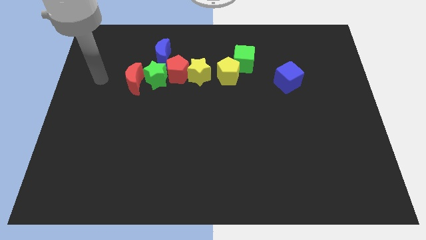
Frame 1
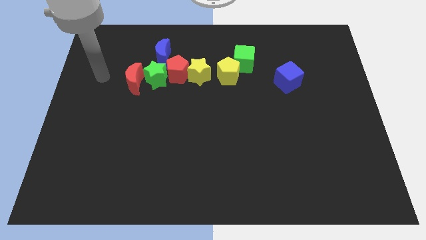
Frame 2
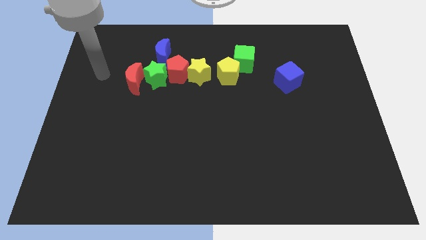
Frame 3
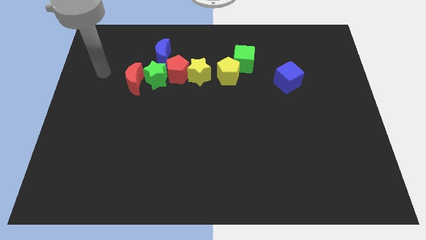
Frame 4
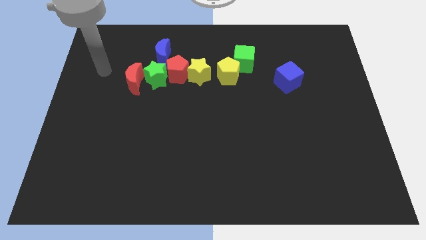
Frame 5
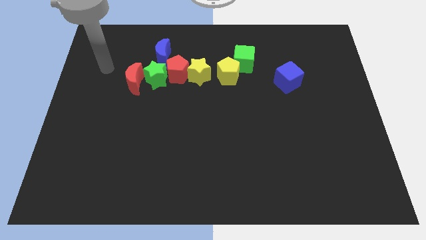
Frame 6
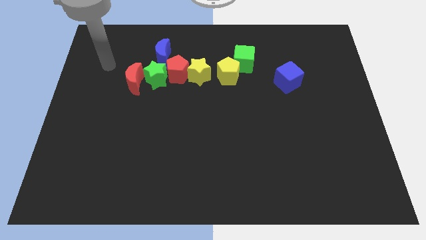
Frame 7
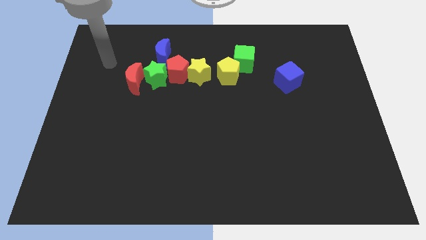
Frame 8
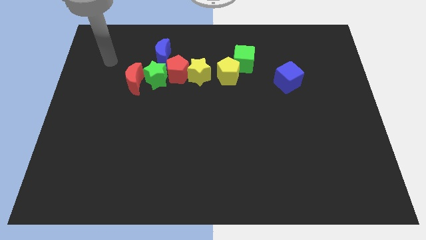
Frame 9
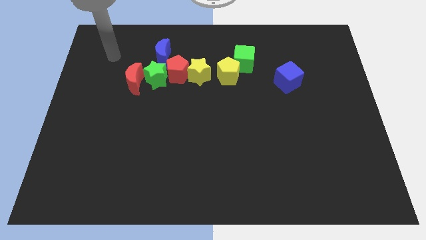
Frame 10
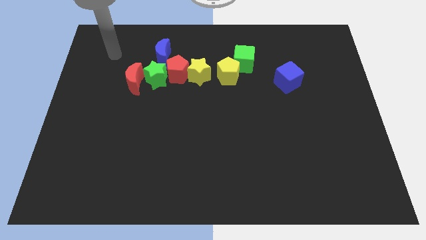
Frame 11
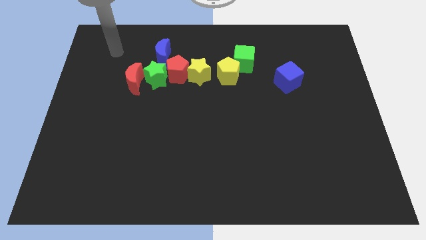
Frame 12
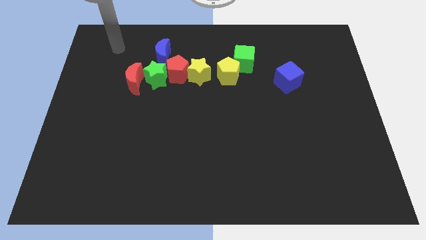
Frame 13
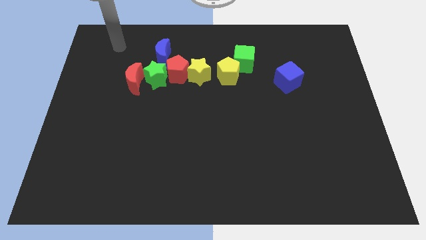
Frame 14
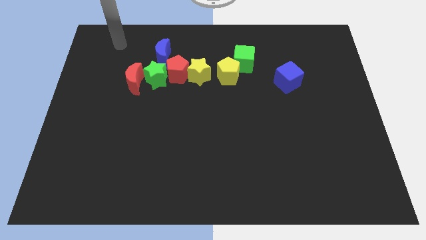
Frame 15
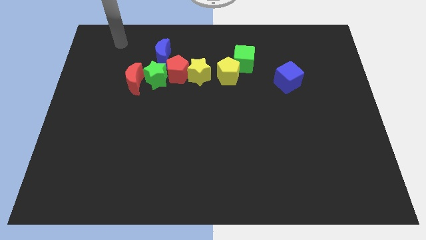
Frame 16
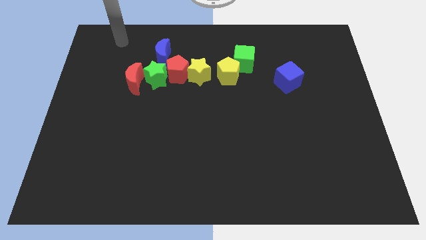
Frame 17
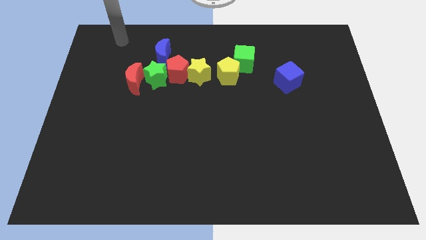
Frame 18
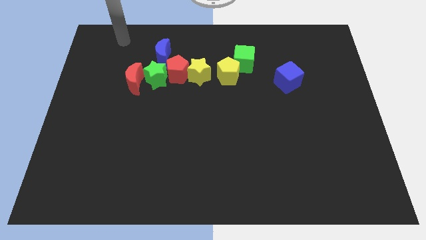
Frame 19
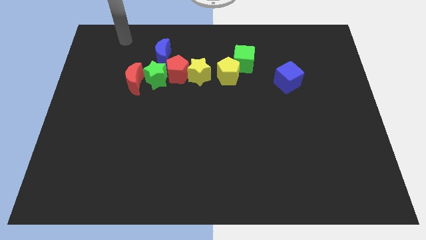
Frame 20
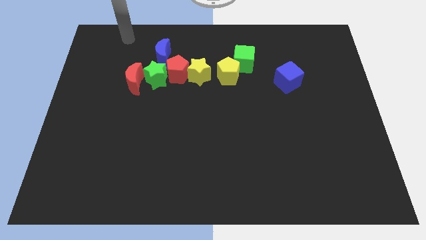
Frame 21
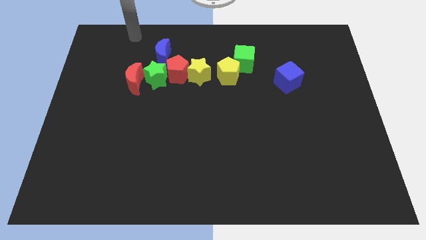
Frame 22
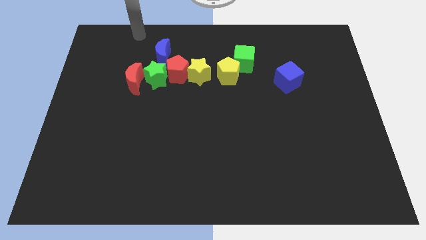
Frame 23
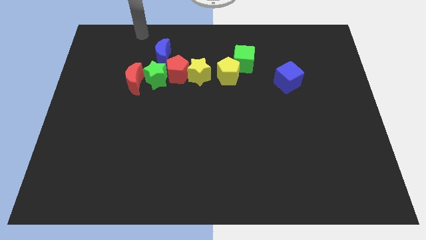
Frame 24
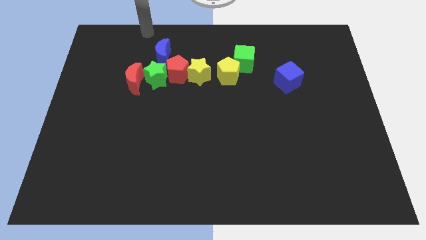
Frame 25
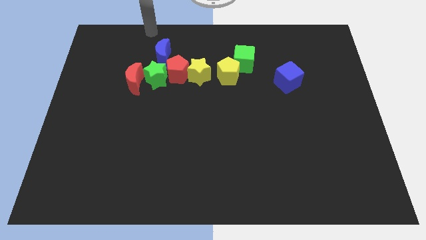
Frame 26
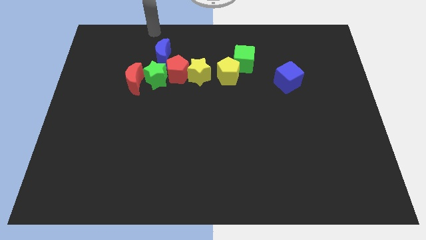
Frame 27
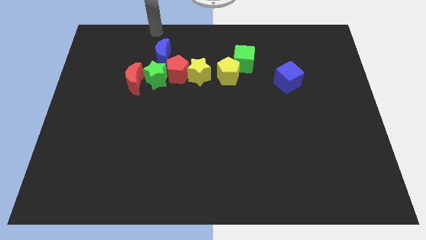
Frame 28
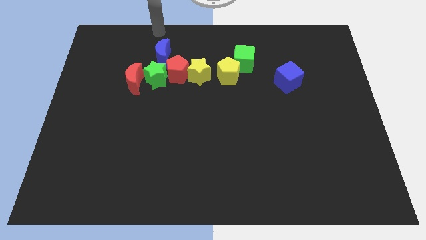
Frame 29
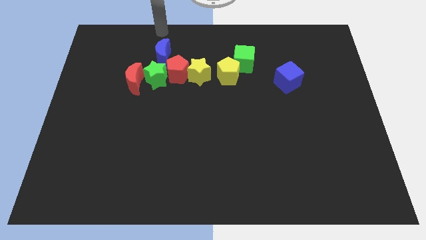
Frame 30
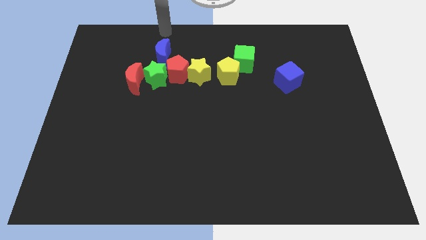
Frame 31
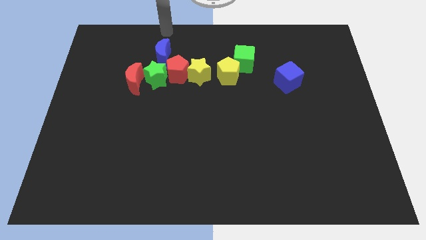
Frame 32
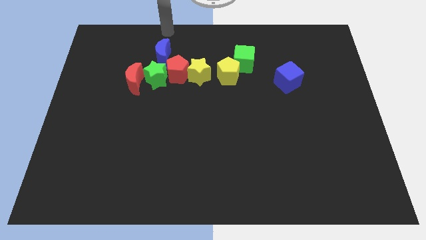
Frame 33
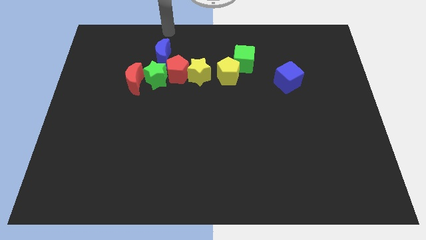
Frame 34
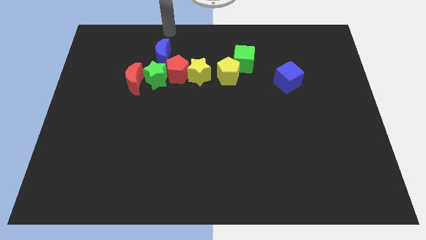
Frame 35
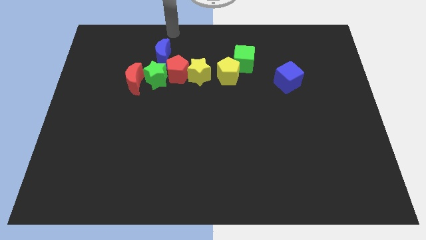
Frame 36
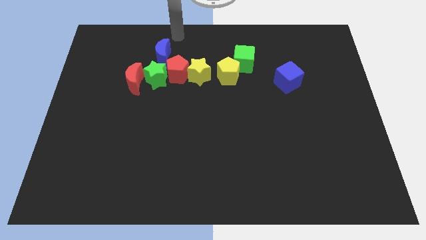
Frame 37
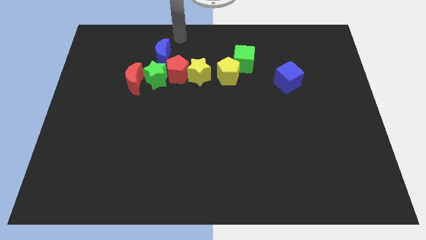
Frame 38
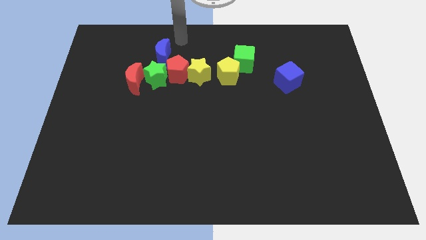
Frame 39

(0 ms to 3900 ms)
point your arm to the top right side of the blue moon

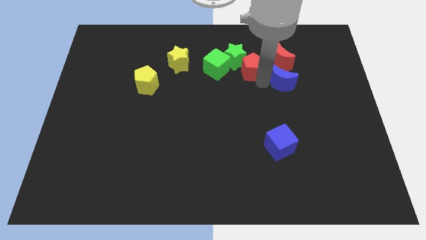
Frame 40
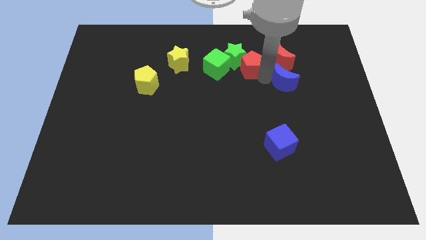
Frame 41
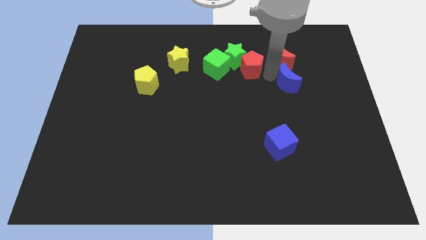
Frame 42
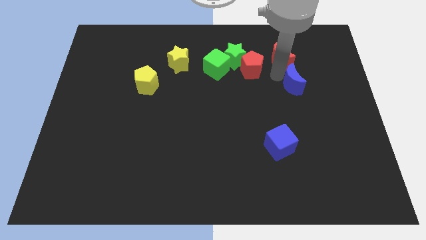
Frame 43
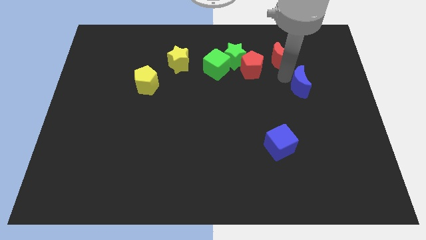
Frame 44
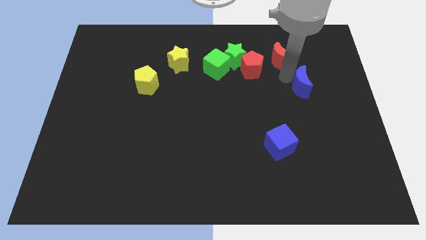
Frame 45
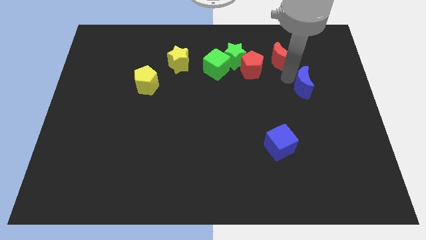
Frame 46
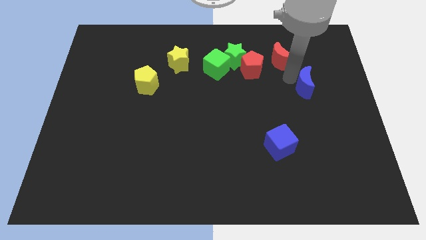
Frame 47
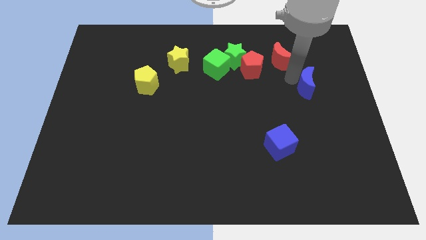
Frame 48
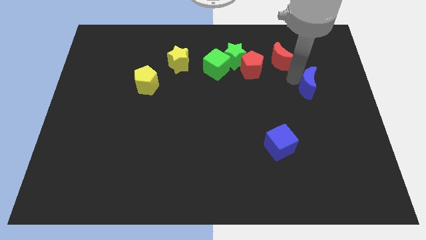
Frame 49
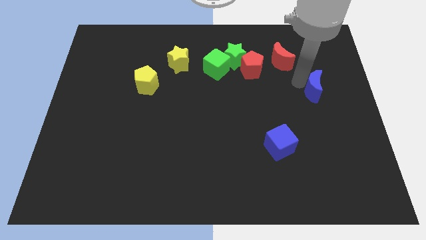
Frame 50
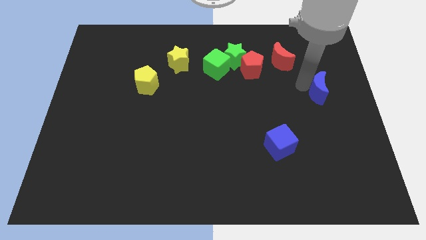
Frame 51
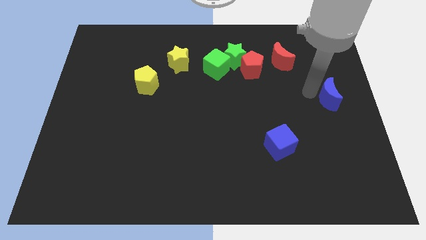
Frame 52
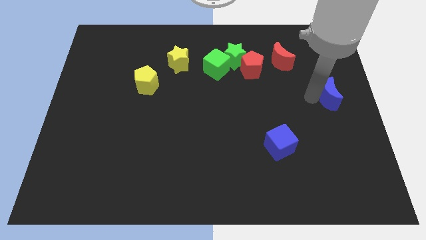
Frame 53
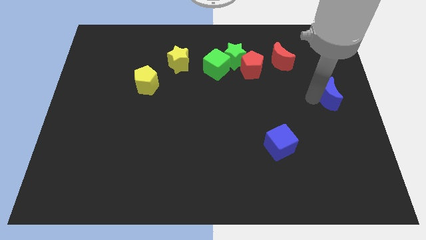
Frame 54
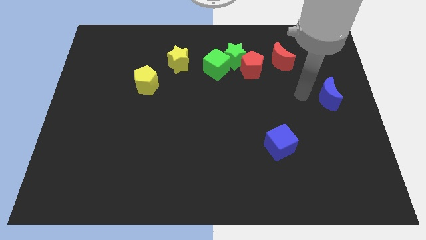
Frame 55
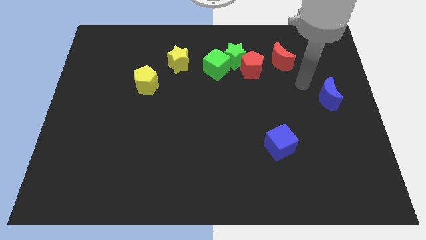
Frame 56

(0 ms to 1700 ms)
move blue moon away from the red moon

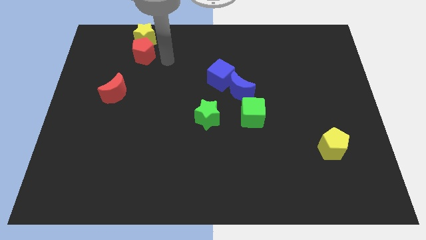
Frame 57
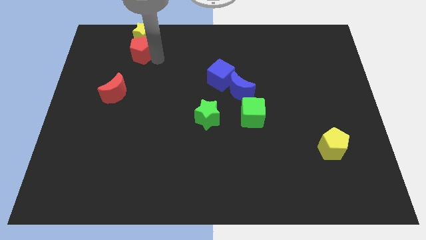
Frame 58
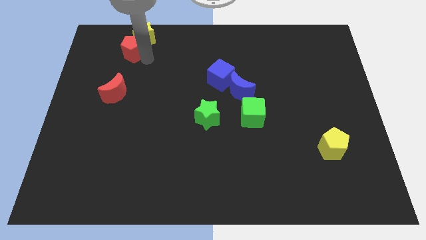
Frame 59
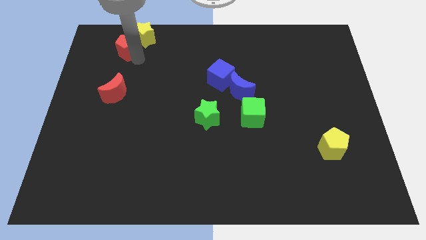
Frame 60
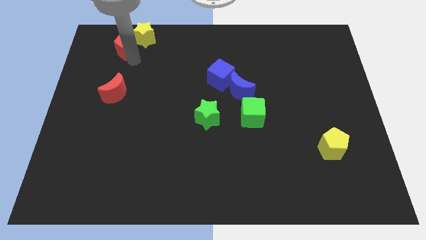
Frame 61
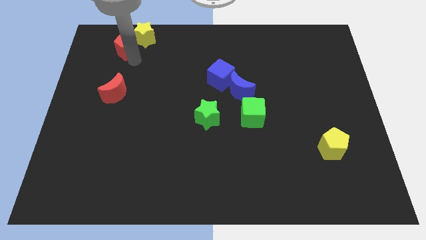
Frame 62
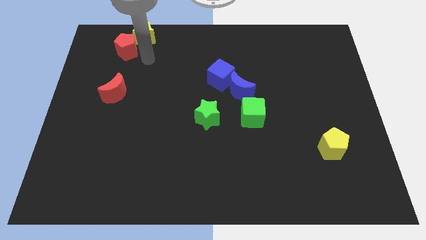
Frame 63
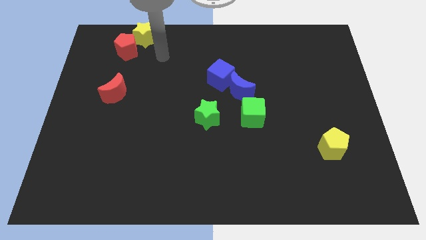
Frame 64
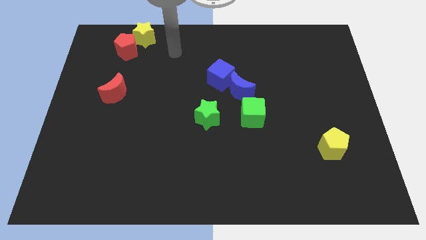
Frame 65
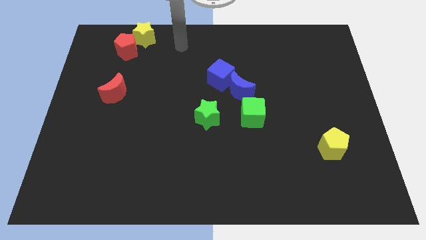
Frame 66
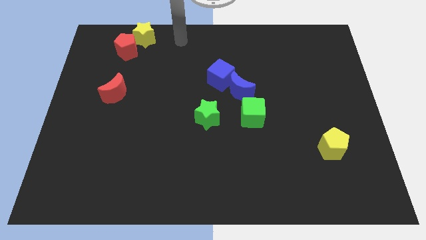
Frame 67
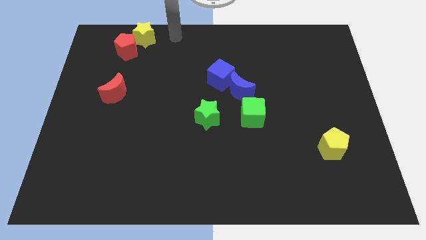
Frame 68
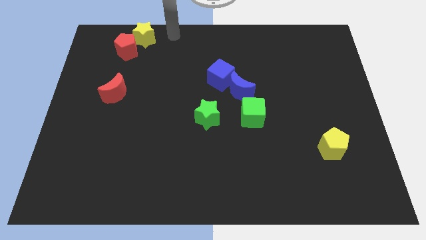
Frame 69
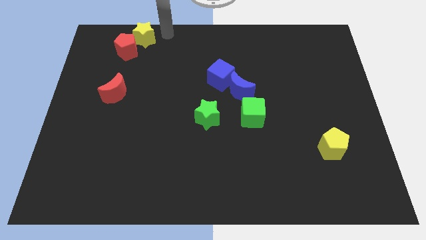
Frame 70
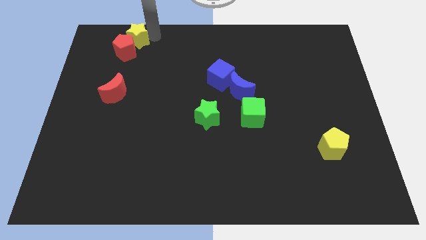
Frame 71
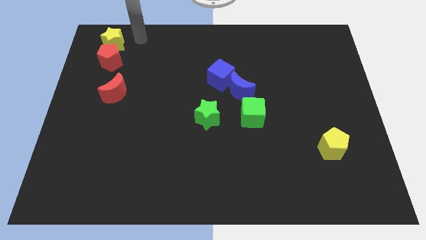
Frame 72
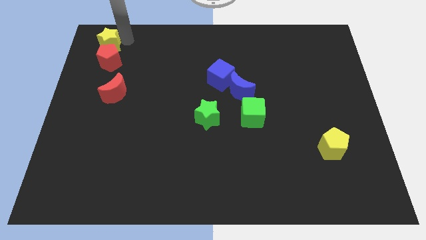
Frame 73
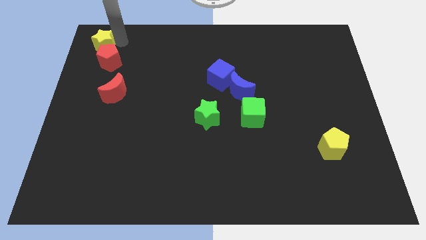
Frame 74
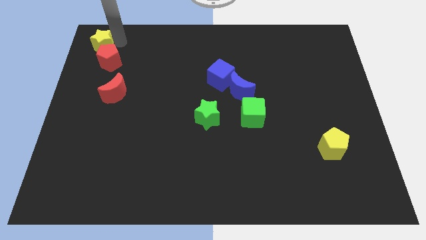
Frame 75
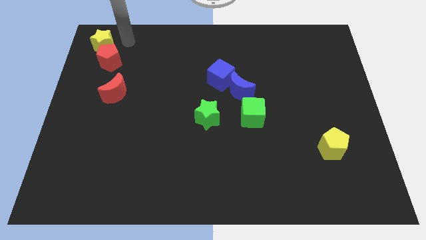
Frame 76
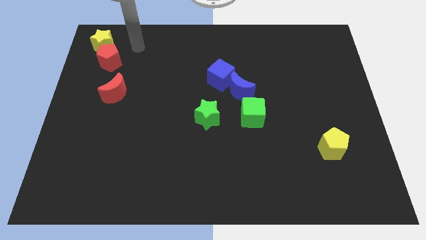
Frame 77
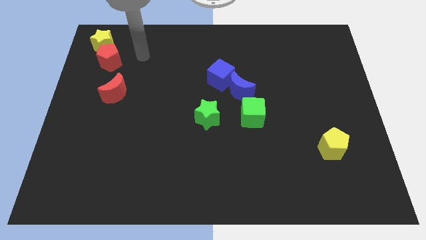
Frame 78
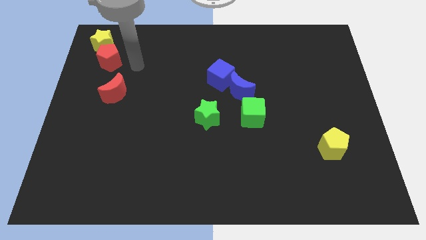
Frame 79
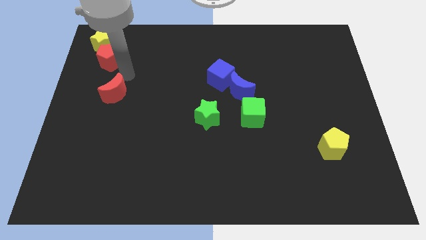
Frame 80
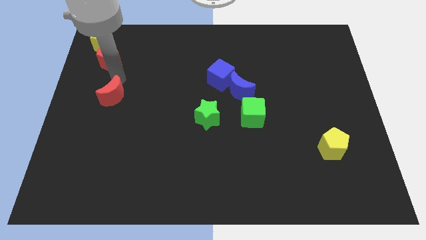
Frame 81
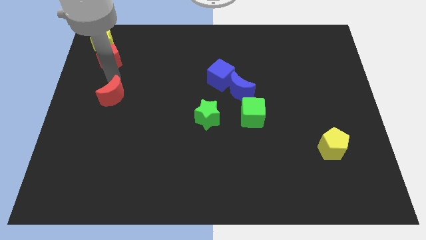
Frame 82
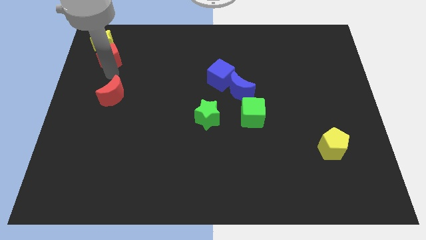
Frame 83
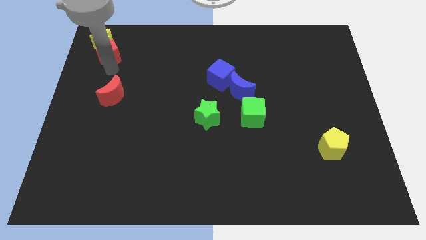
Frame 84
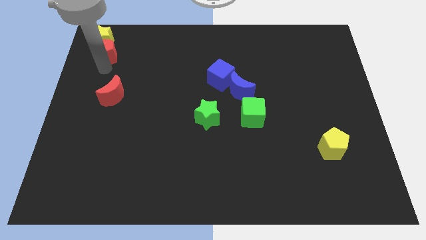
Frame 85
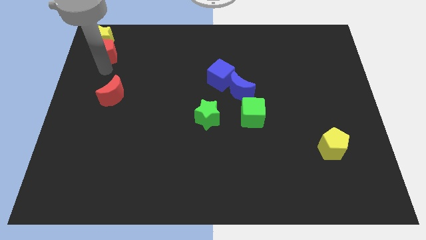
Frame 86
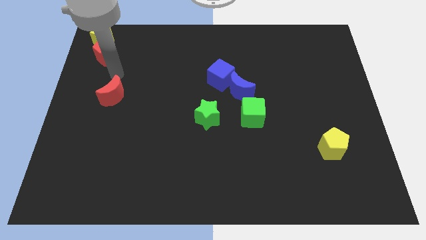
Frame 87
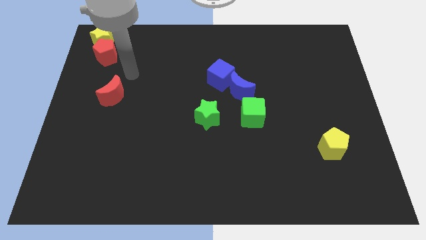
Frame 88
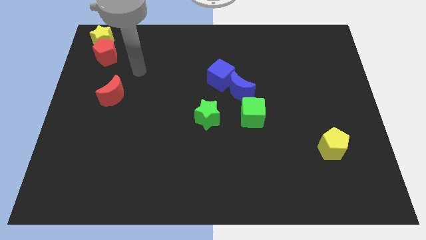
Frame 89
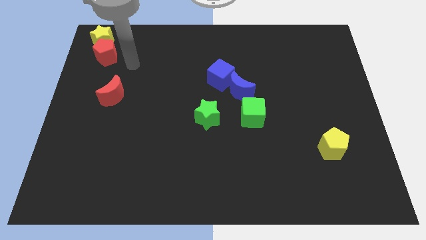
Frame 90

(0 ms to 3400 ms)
move the red pentagon and yellow star diagonally at the top left side of the red moon

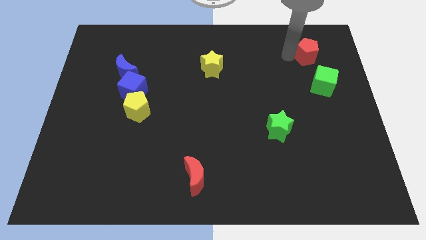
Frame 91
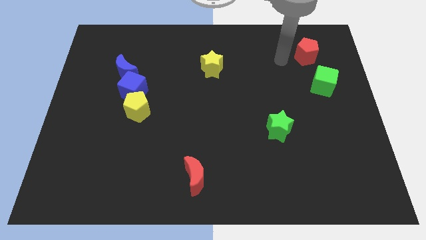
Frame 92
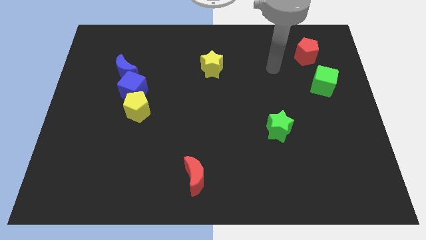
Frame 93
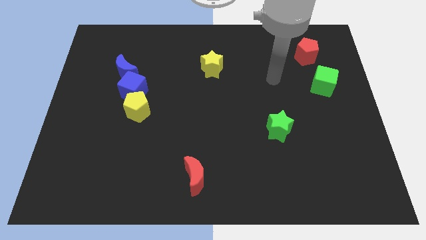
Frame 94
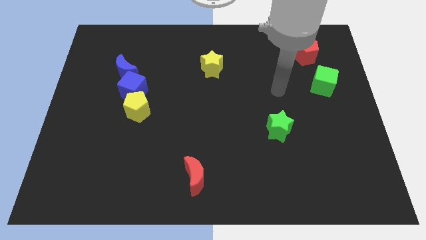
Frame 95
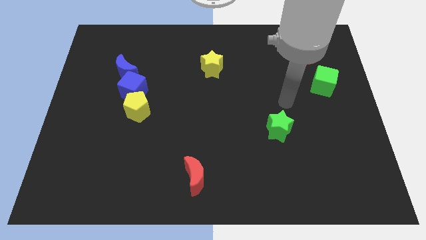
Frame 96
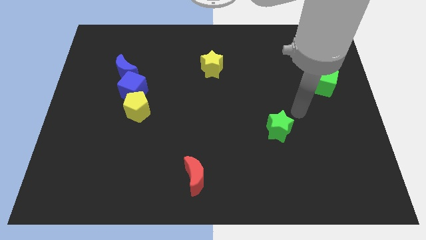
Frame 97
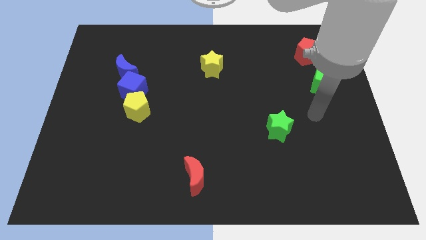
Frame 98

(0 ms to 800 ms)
go away from the red pentagon
